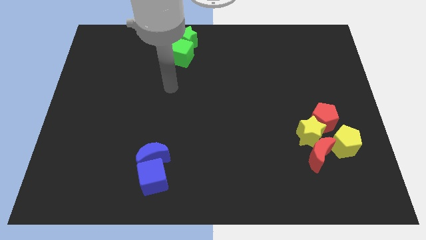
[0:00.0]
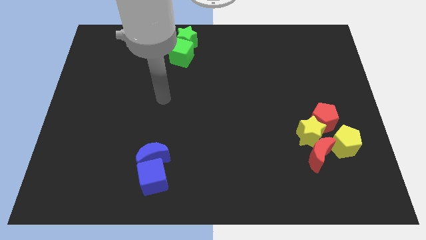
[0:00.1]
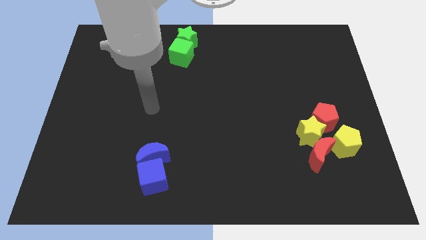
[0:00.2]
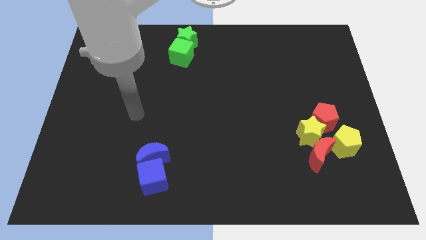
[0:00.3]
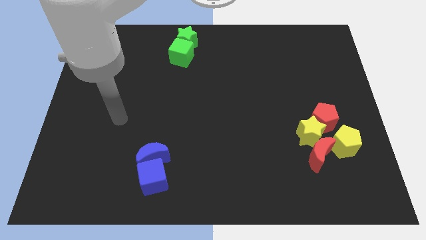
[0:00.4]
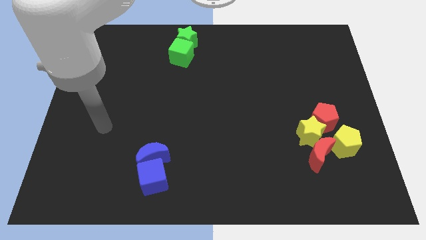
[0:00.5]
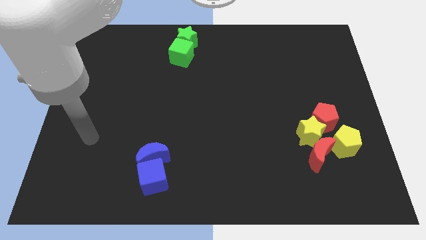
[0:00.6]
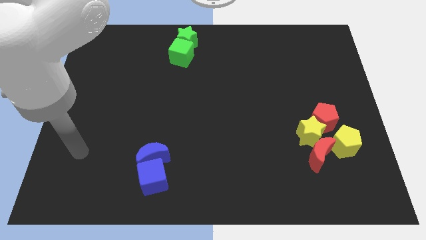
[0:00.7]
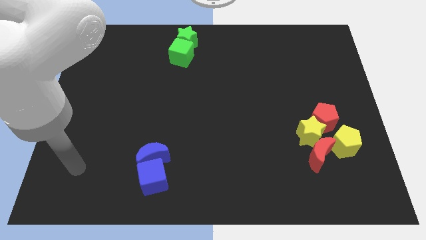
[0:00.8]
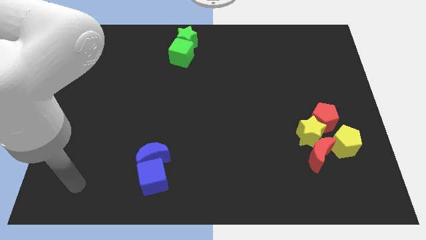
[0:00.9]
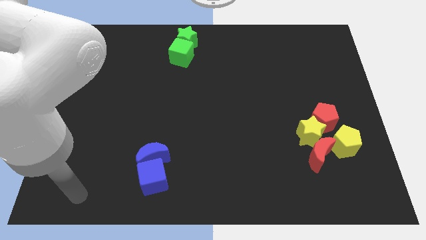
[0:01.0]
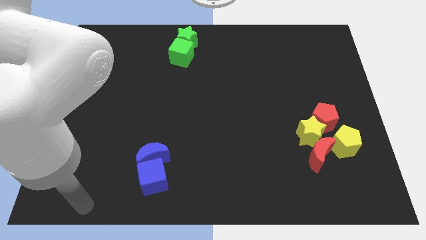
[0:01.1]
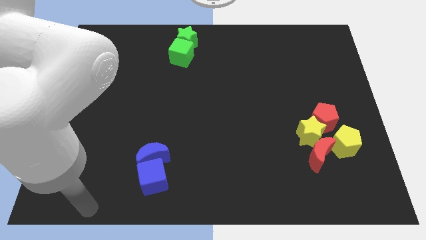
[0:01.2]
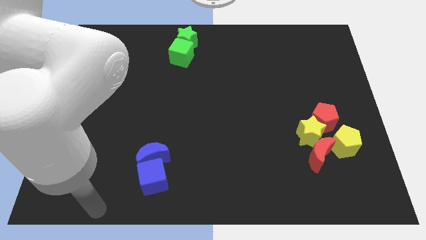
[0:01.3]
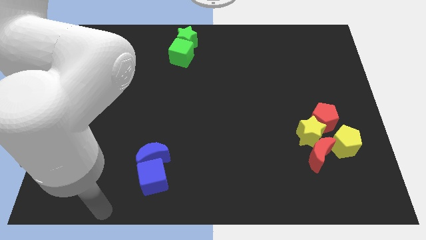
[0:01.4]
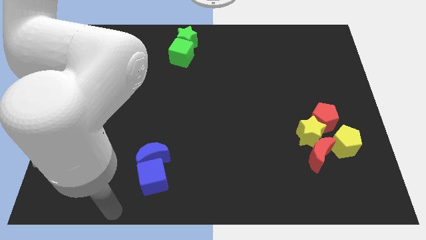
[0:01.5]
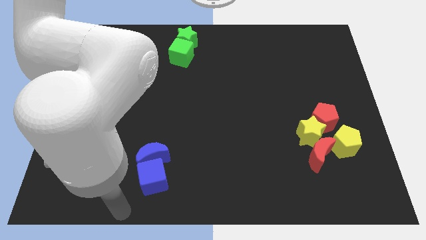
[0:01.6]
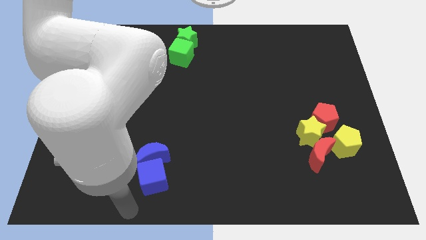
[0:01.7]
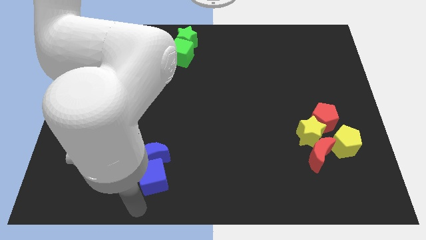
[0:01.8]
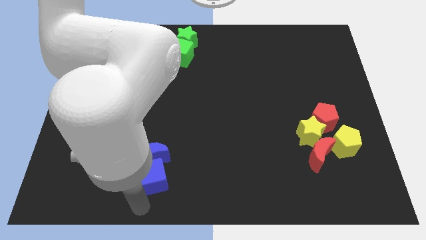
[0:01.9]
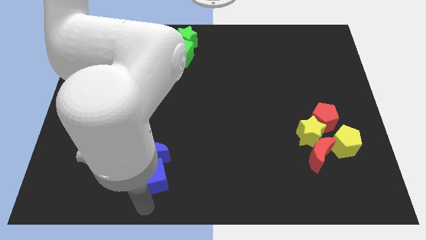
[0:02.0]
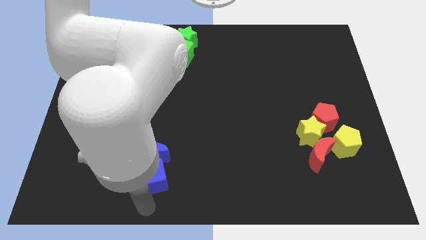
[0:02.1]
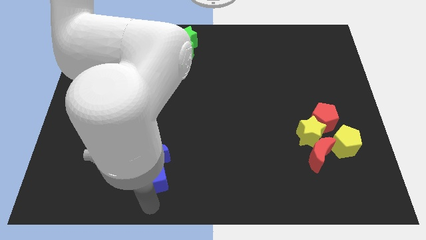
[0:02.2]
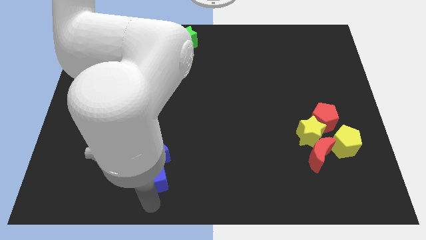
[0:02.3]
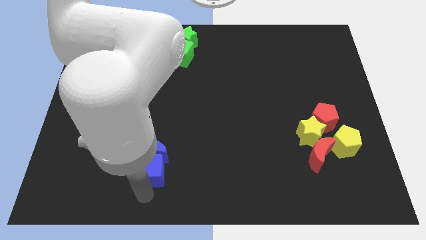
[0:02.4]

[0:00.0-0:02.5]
place the arm down to the blue blocks

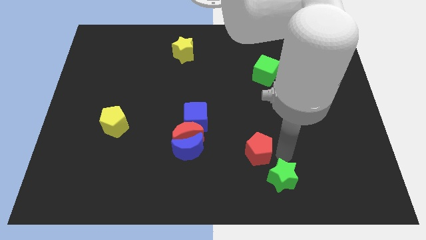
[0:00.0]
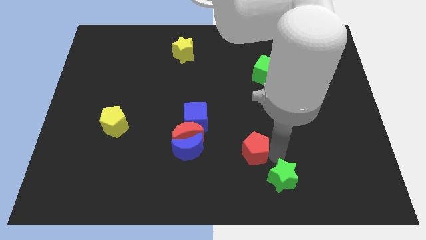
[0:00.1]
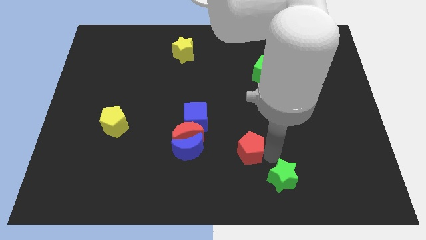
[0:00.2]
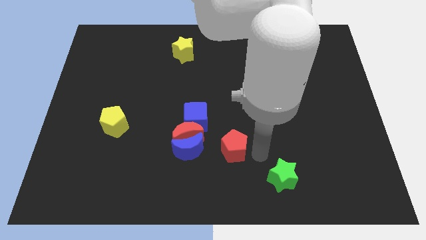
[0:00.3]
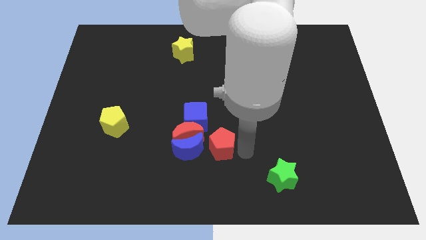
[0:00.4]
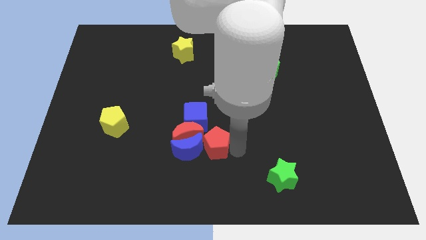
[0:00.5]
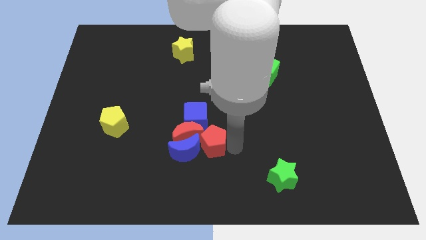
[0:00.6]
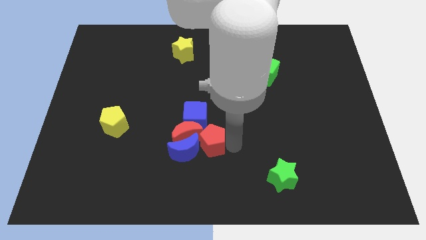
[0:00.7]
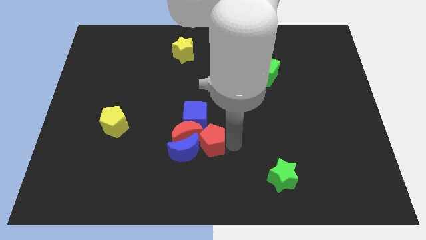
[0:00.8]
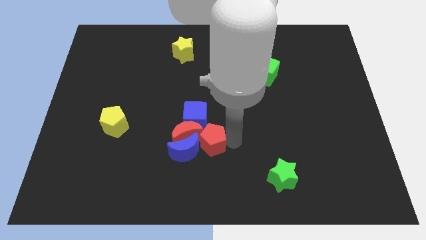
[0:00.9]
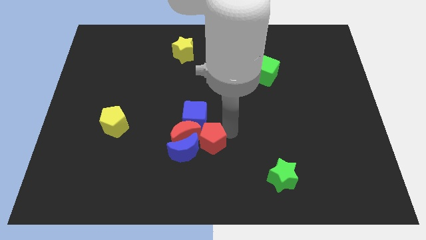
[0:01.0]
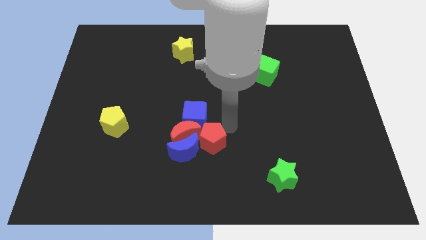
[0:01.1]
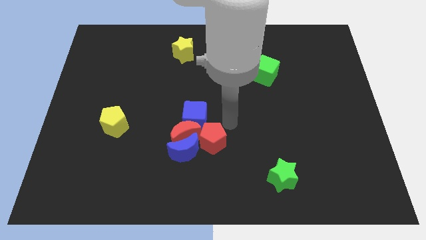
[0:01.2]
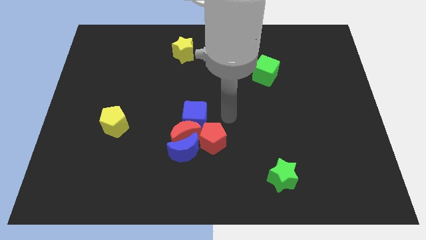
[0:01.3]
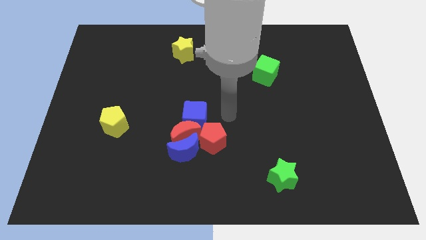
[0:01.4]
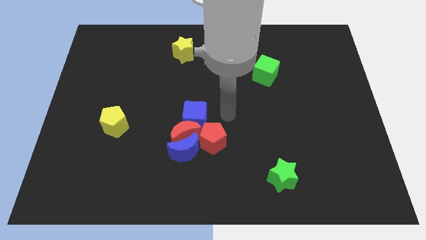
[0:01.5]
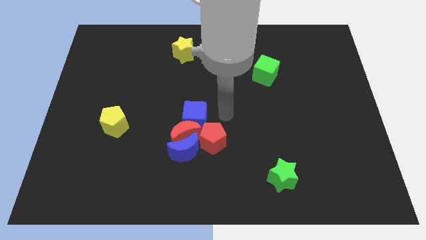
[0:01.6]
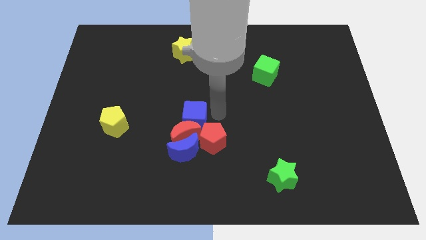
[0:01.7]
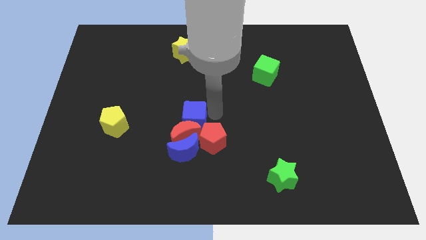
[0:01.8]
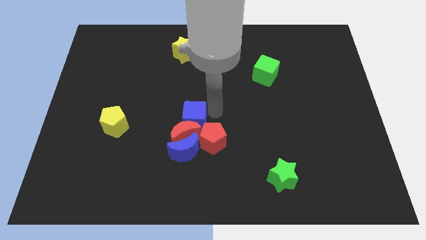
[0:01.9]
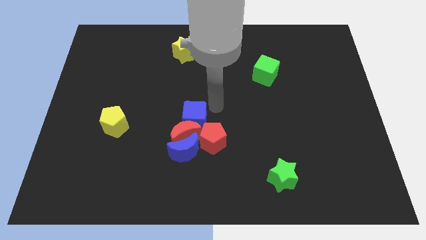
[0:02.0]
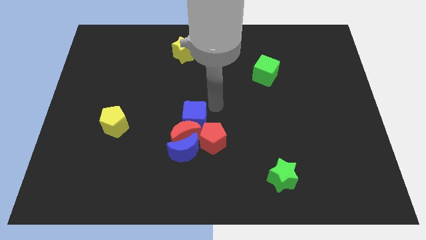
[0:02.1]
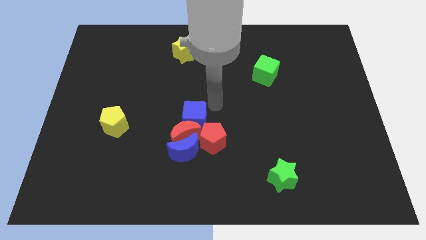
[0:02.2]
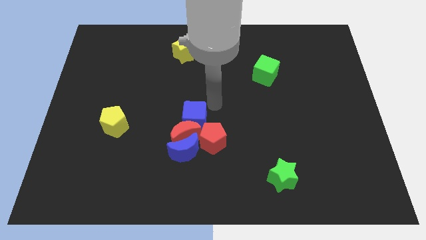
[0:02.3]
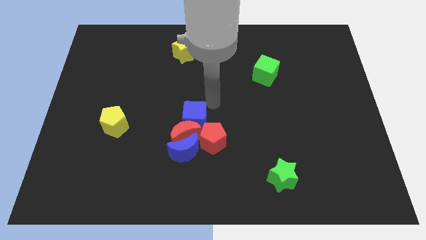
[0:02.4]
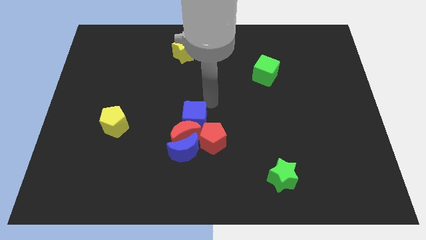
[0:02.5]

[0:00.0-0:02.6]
push the red pentagon into the group of blocks

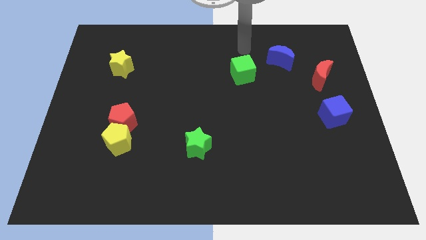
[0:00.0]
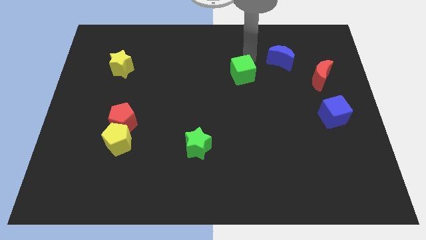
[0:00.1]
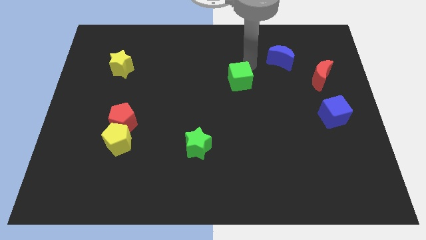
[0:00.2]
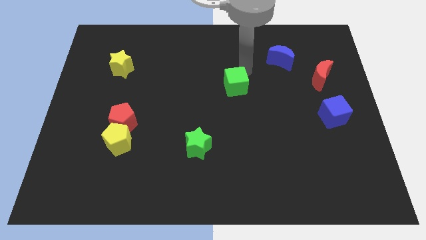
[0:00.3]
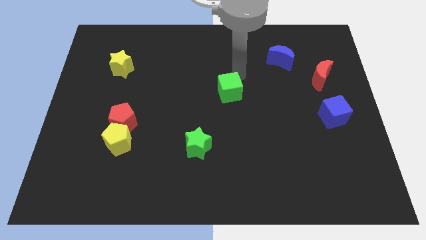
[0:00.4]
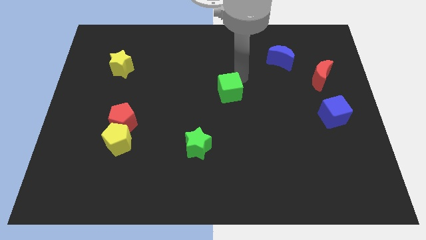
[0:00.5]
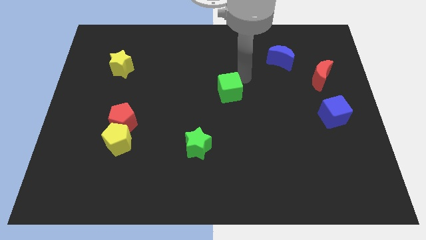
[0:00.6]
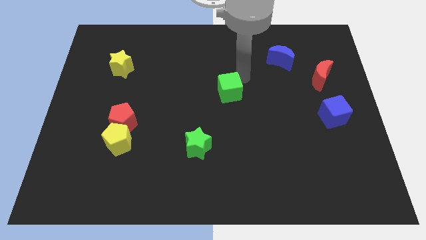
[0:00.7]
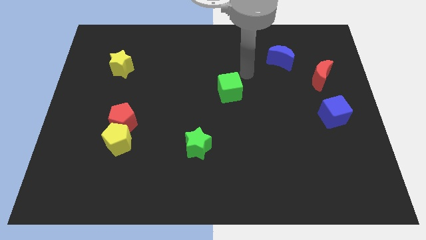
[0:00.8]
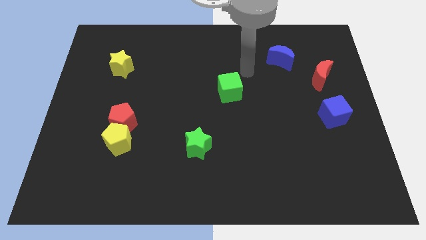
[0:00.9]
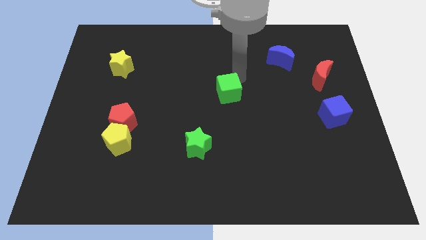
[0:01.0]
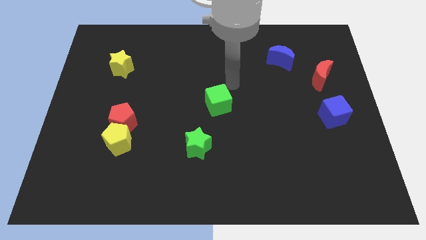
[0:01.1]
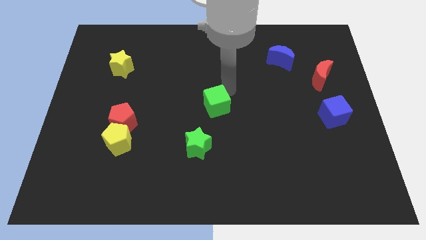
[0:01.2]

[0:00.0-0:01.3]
move the green cube towards the center of the board

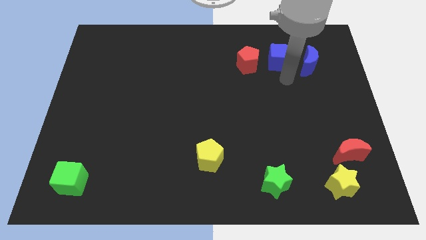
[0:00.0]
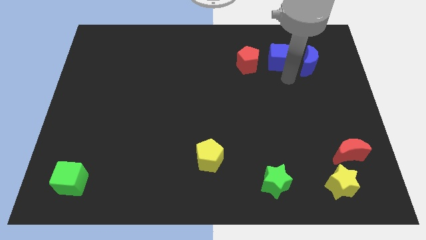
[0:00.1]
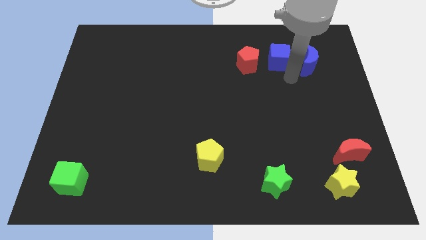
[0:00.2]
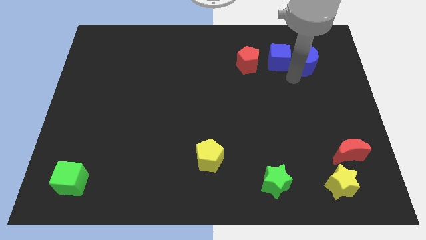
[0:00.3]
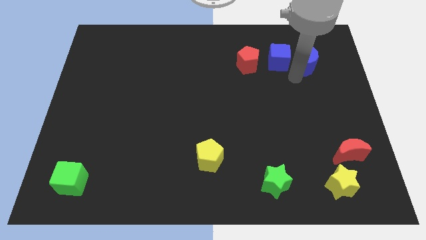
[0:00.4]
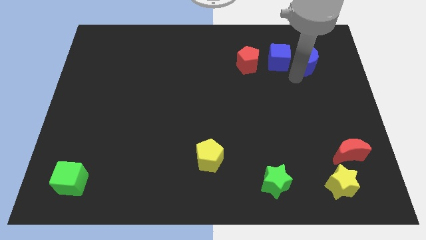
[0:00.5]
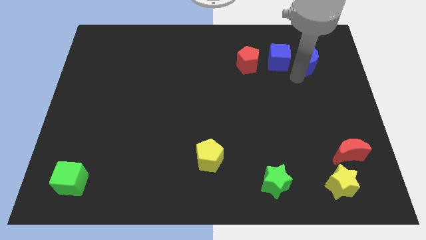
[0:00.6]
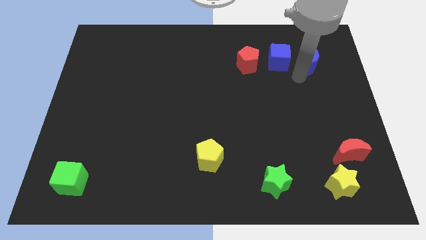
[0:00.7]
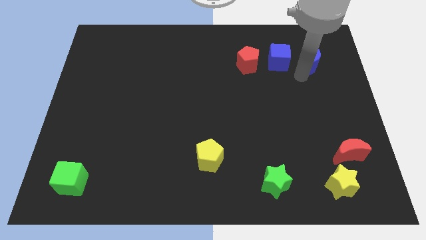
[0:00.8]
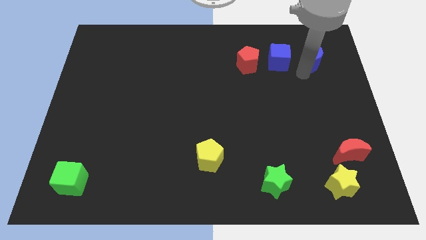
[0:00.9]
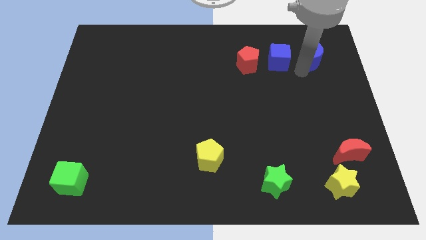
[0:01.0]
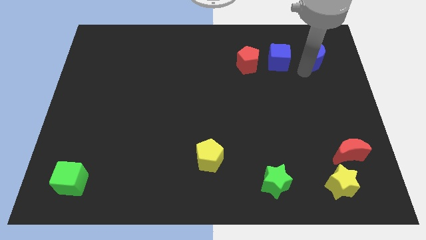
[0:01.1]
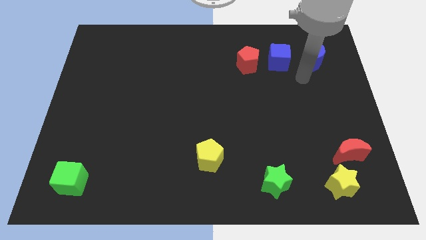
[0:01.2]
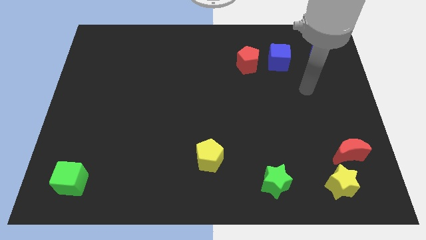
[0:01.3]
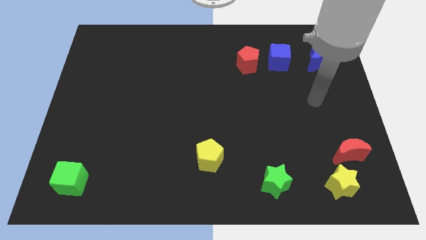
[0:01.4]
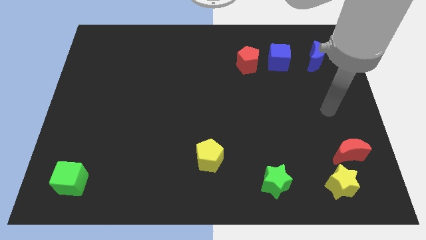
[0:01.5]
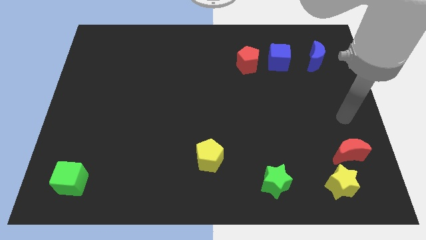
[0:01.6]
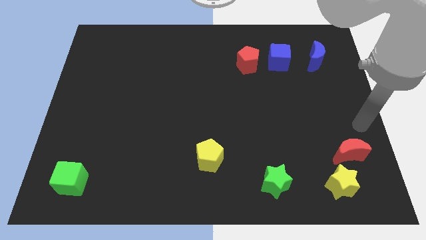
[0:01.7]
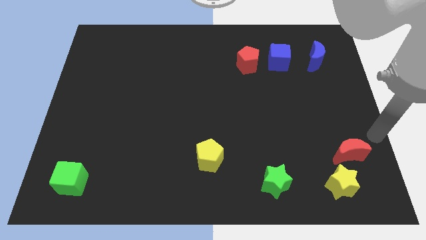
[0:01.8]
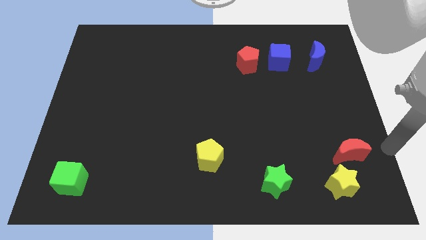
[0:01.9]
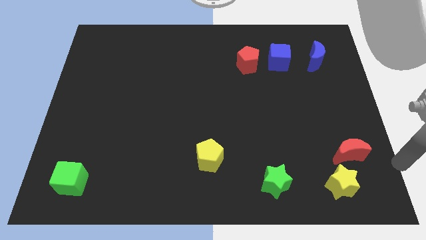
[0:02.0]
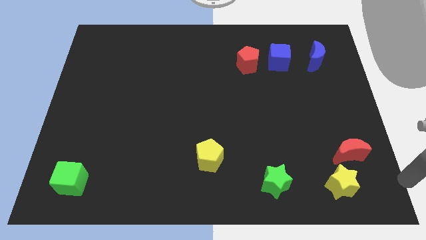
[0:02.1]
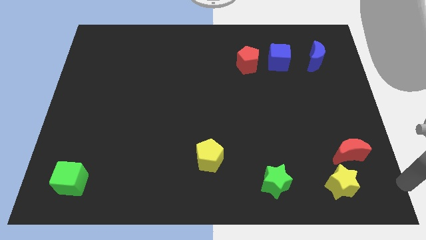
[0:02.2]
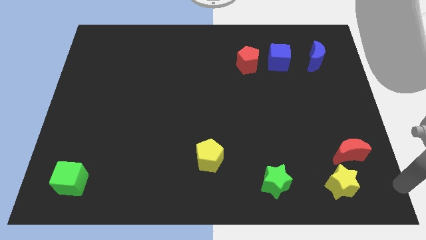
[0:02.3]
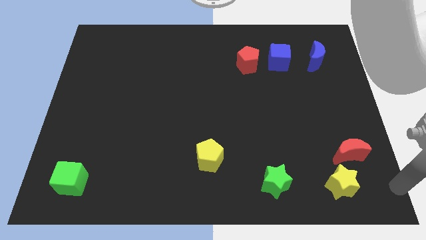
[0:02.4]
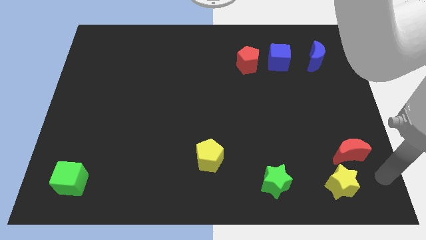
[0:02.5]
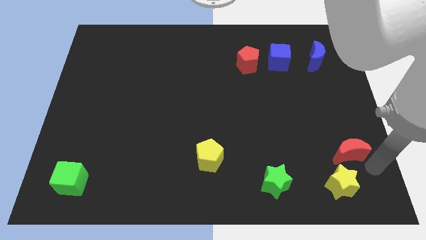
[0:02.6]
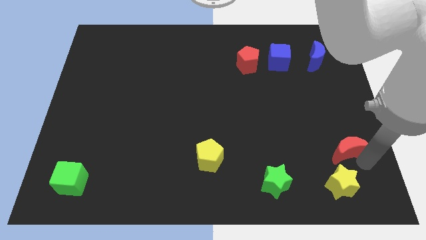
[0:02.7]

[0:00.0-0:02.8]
move your arm towards the red crescent
